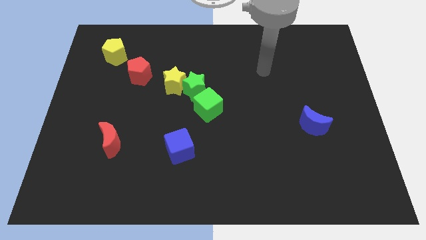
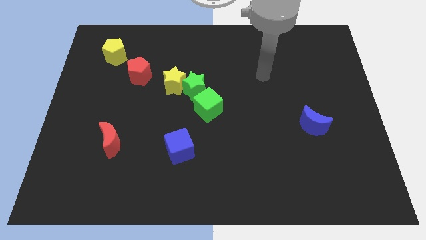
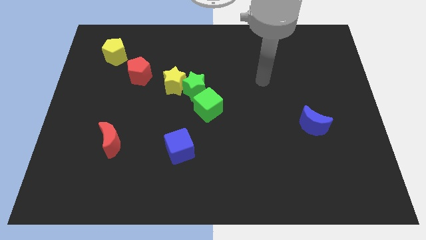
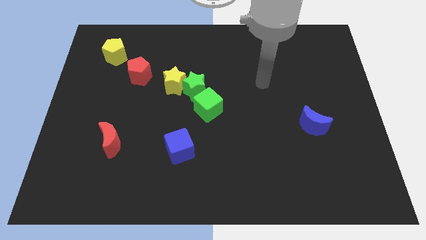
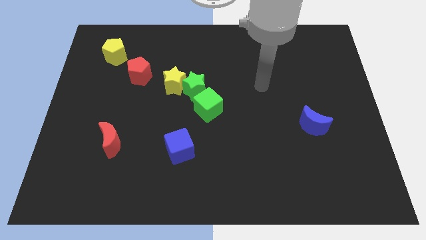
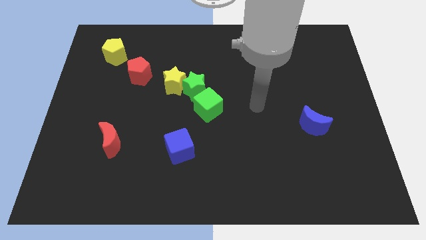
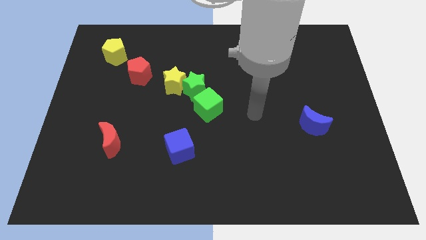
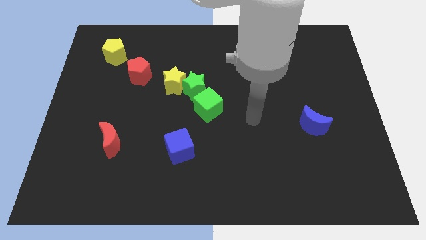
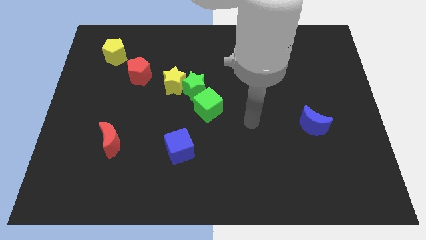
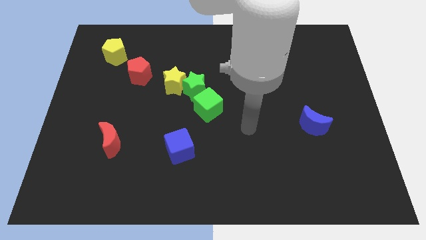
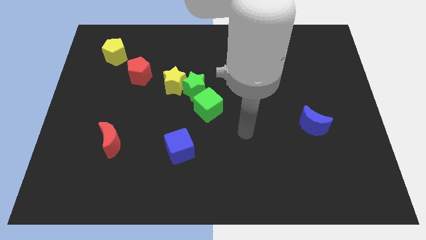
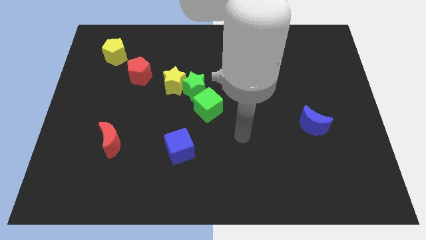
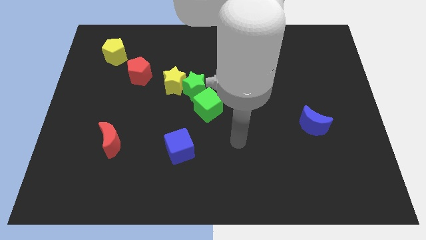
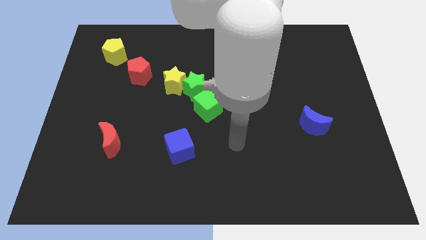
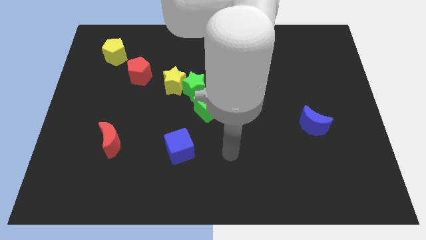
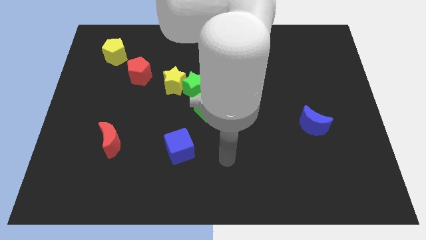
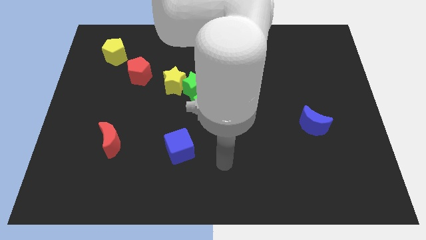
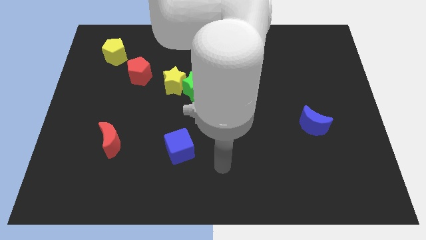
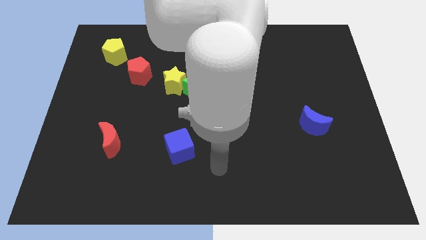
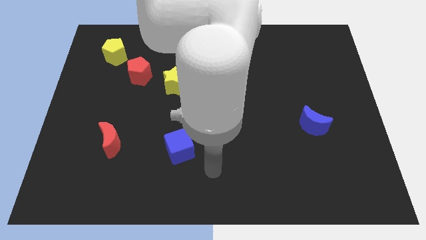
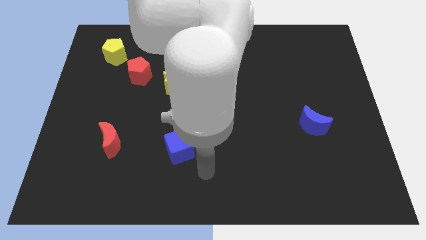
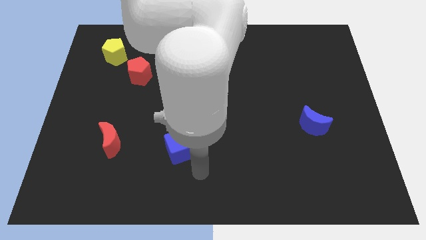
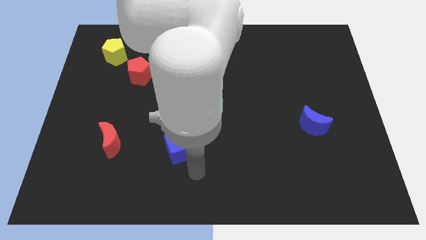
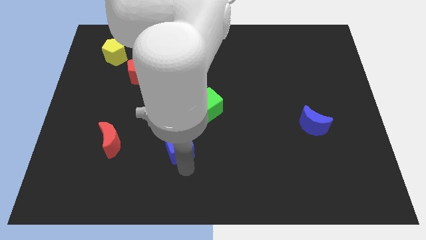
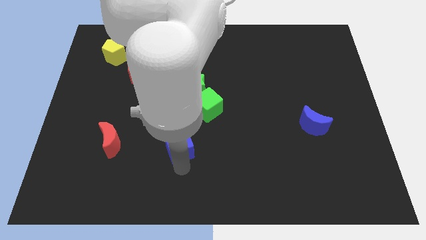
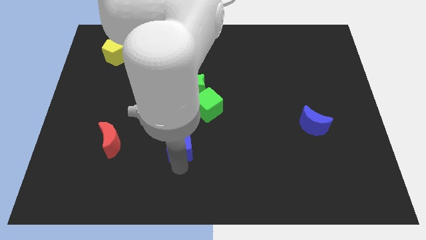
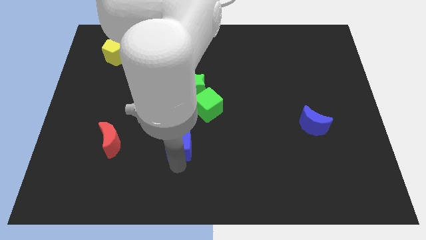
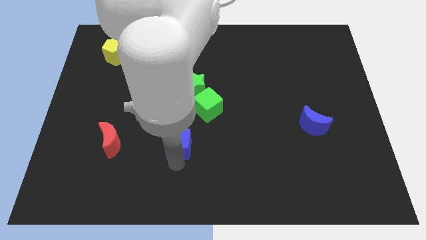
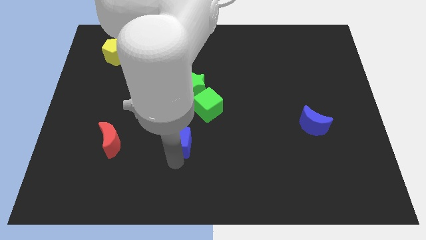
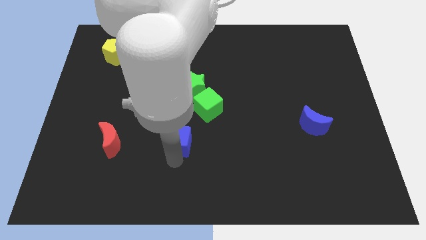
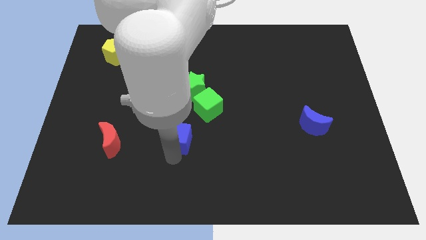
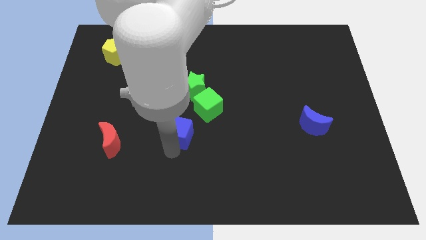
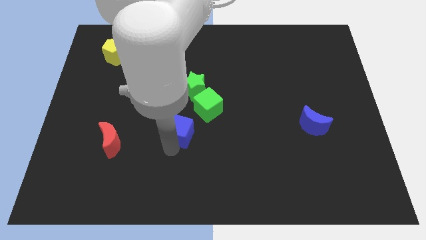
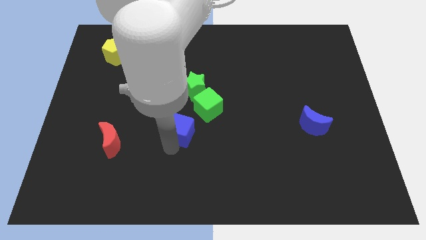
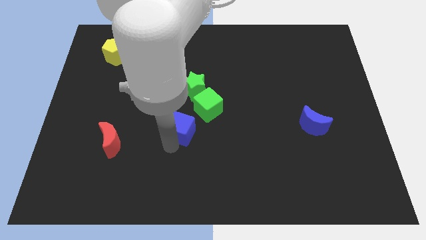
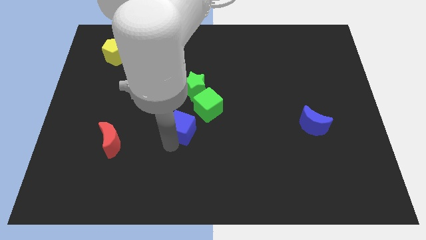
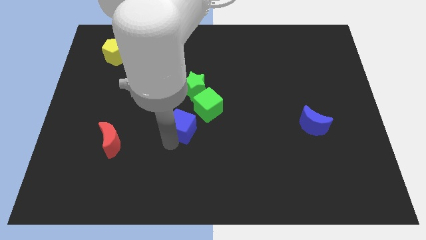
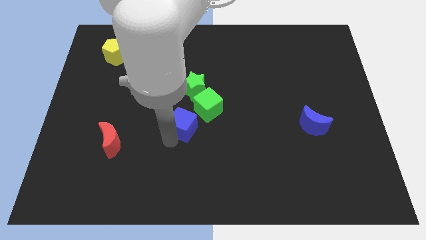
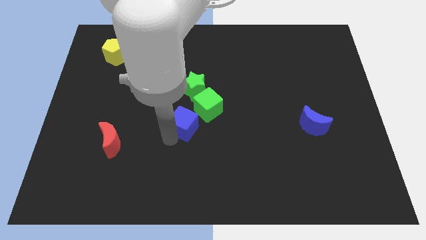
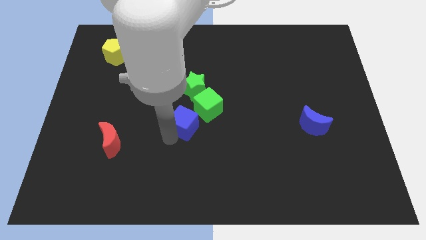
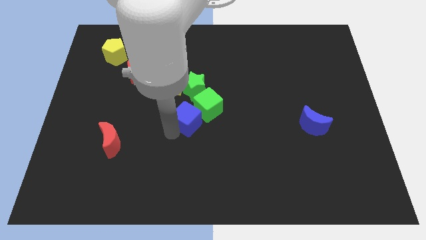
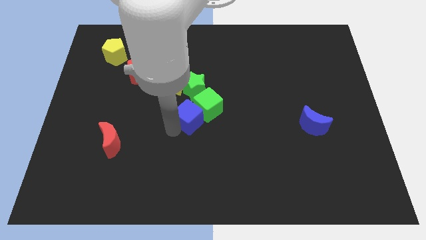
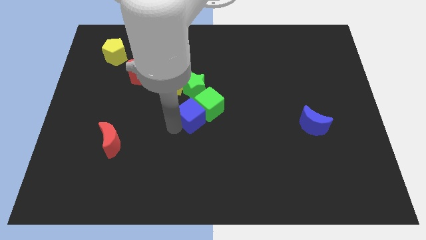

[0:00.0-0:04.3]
move the blue cube next to the green cube

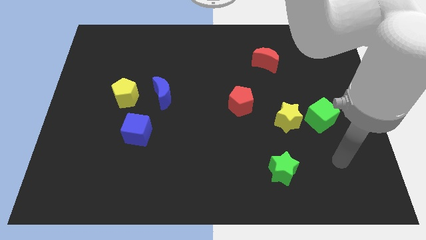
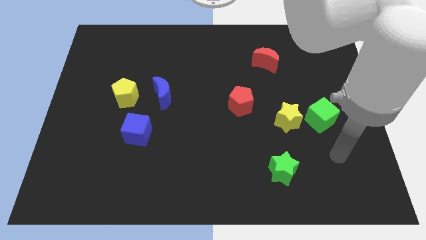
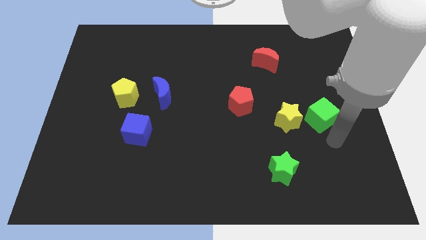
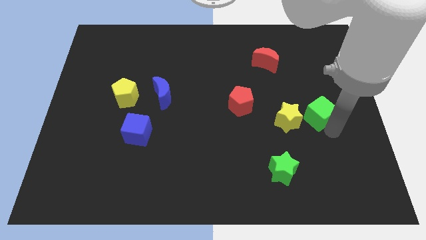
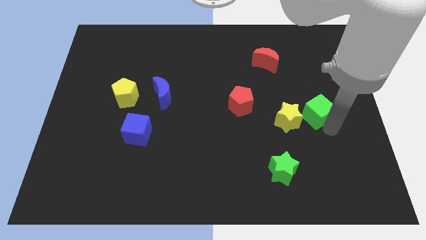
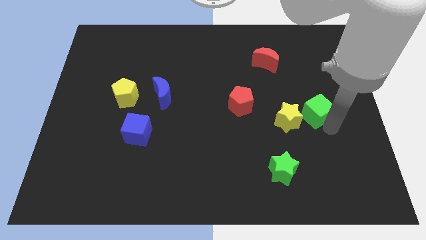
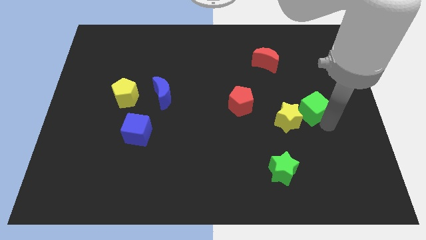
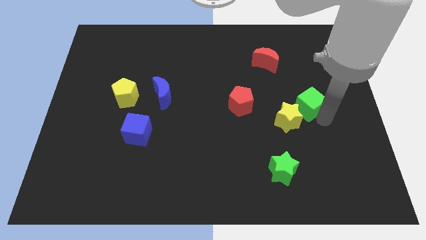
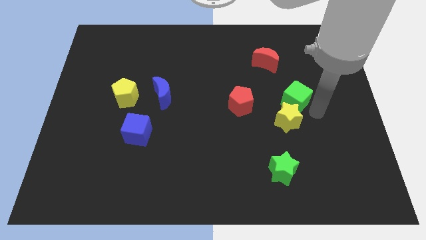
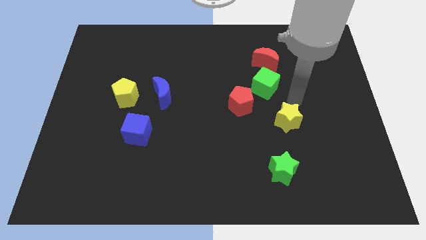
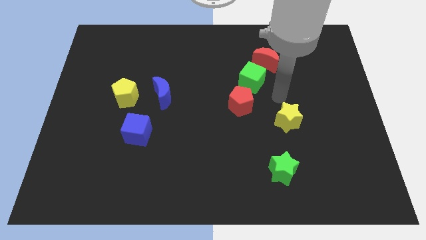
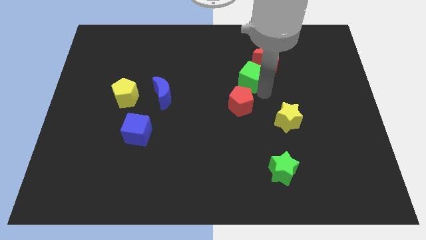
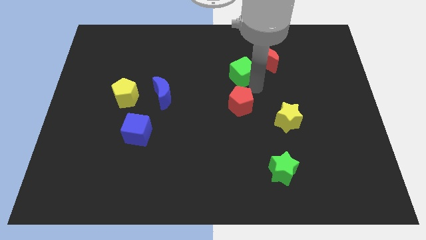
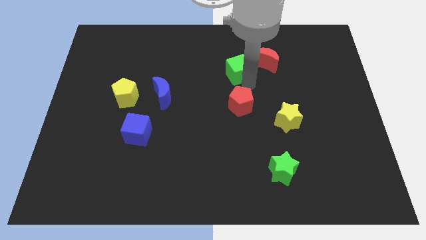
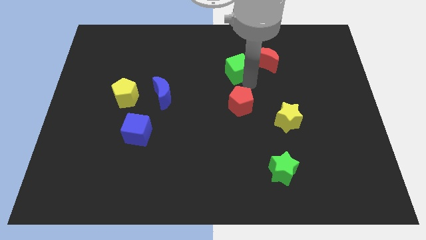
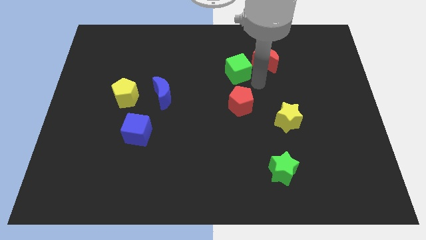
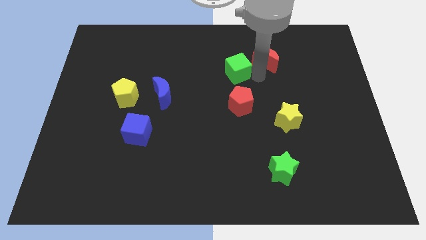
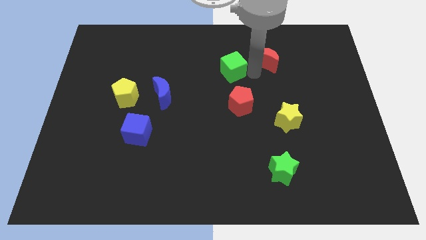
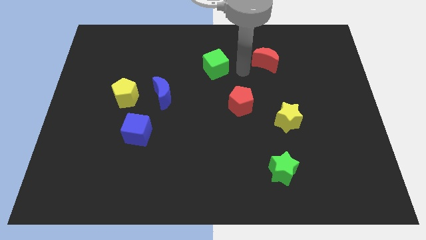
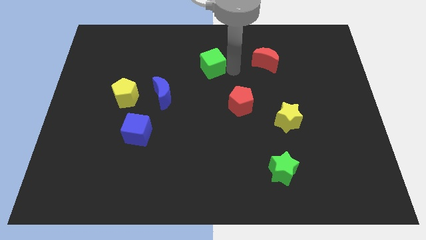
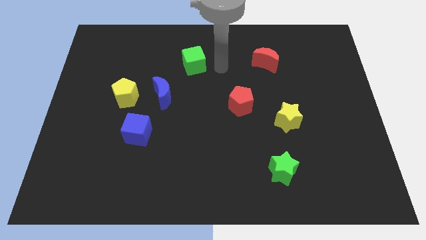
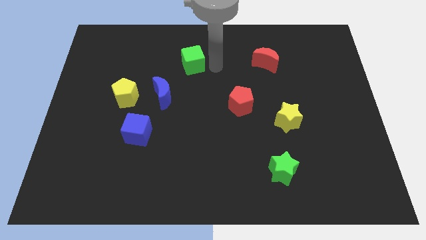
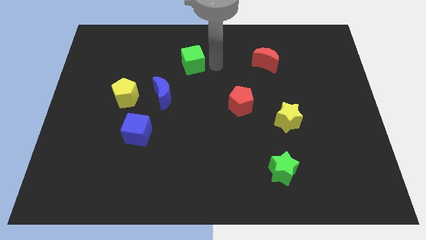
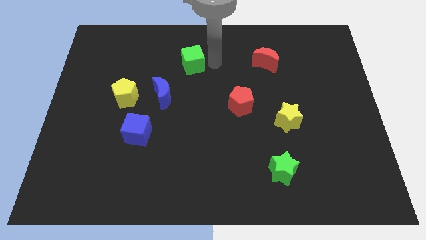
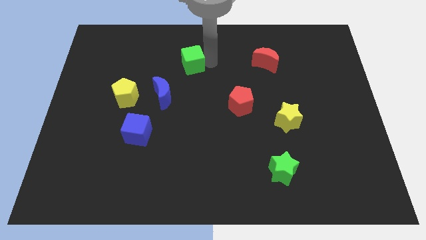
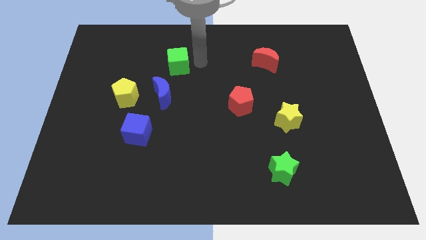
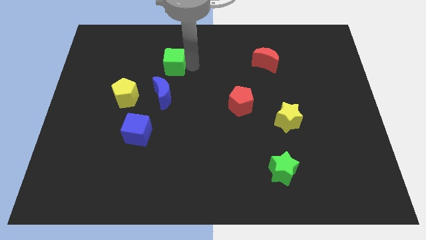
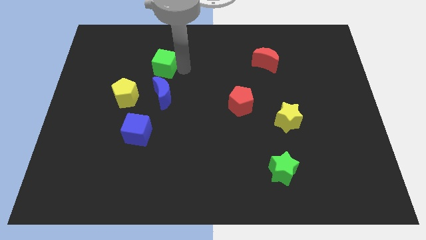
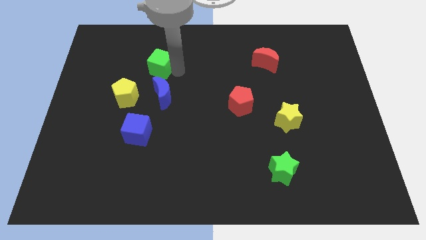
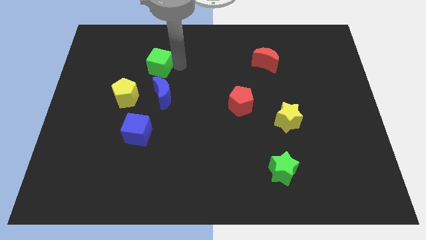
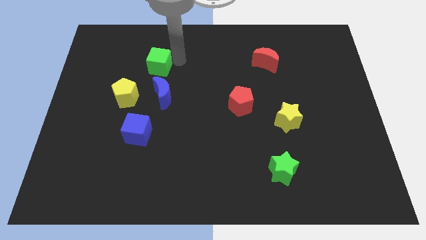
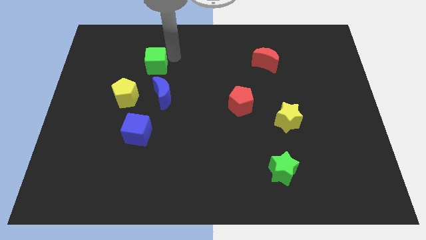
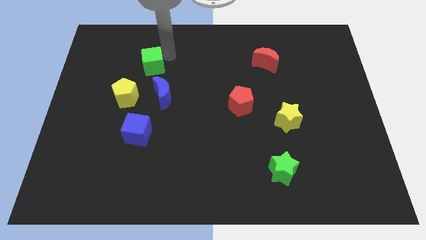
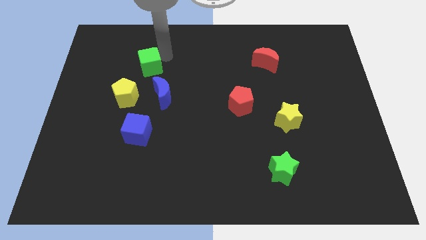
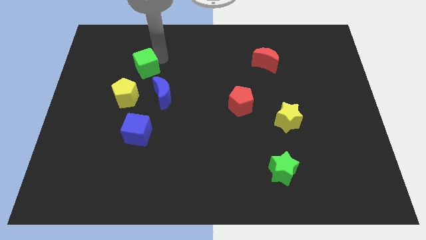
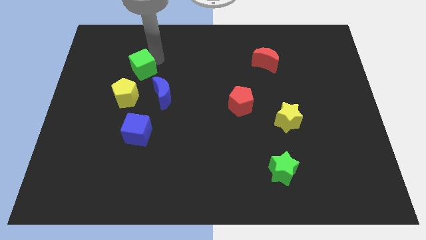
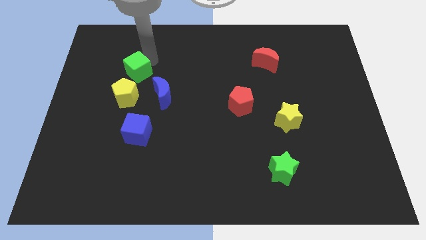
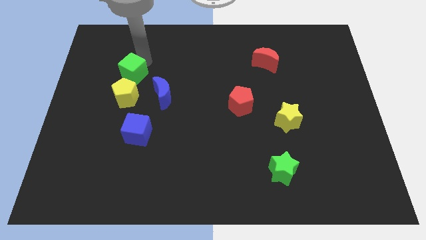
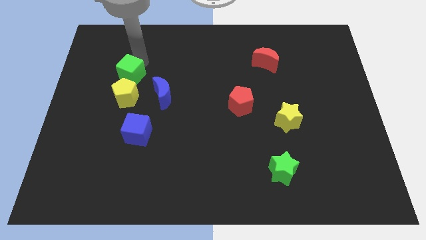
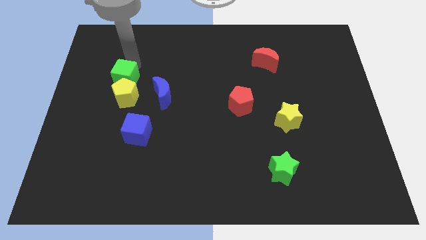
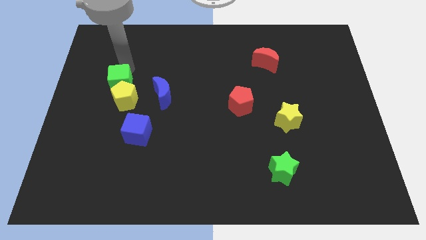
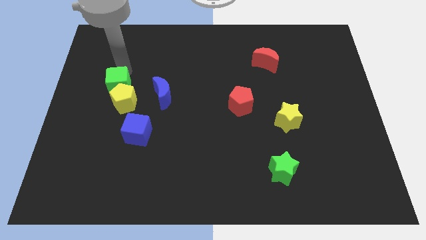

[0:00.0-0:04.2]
push the green cube to the yellow pentagon
